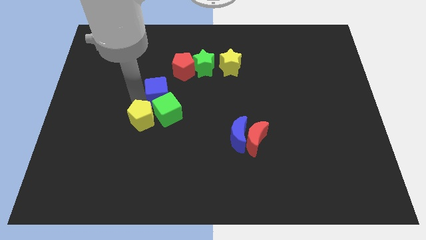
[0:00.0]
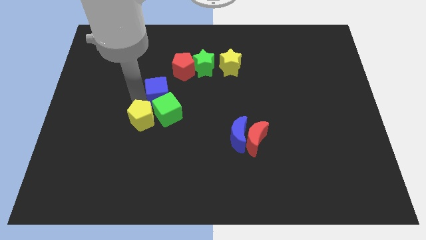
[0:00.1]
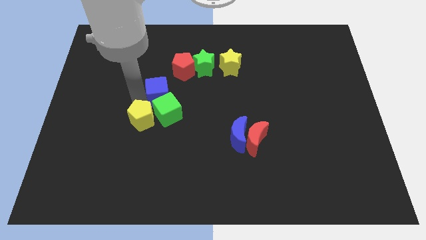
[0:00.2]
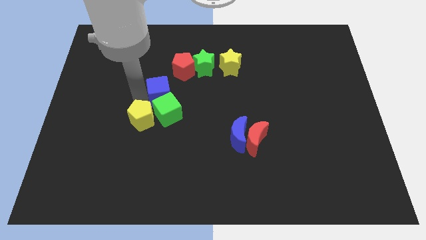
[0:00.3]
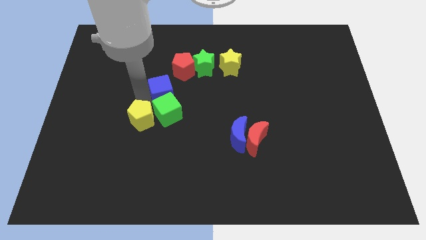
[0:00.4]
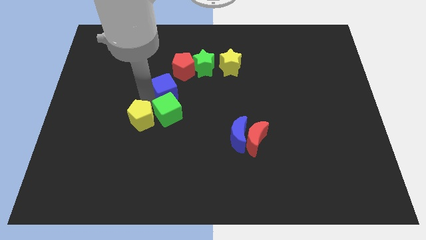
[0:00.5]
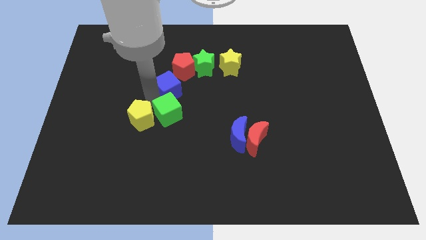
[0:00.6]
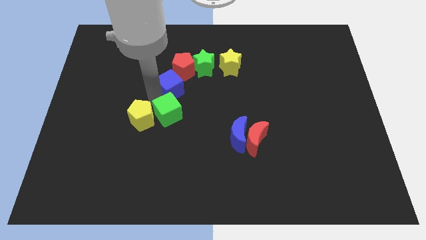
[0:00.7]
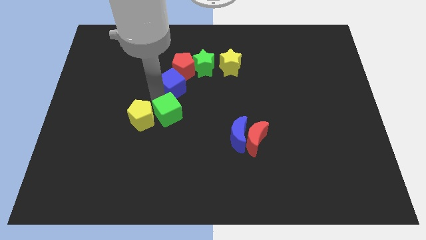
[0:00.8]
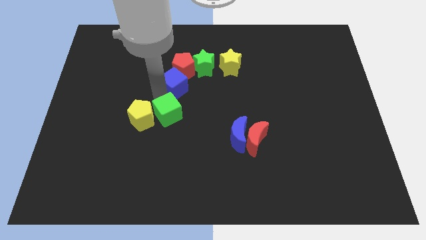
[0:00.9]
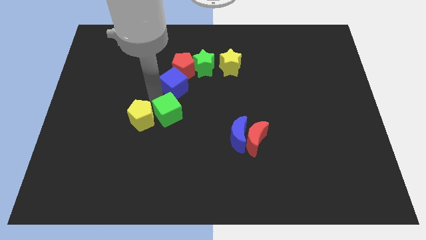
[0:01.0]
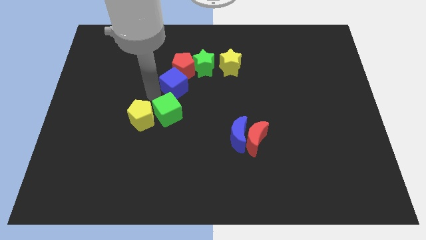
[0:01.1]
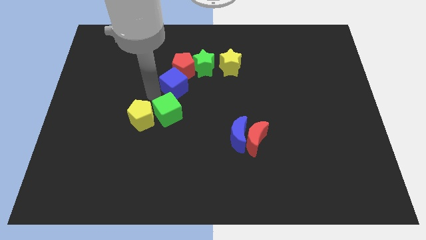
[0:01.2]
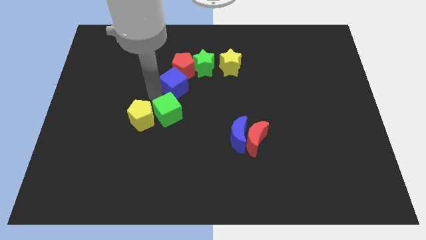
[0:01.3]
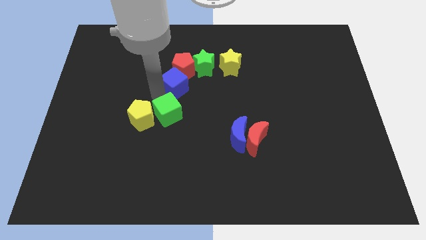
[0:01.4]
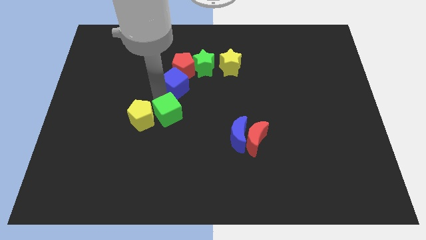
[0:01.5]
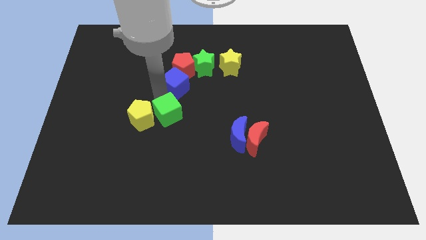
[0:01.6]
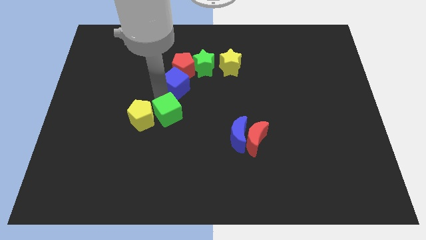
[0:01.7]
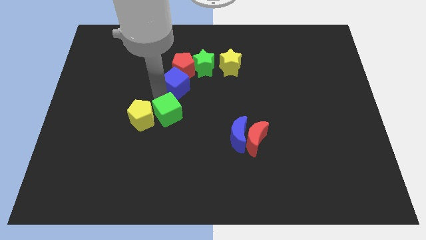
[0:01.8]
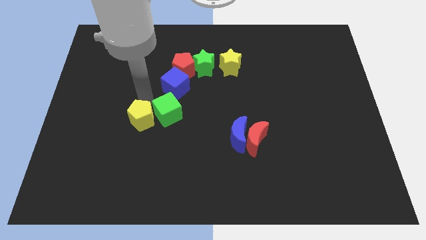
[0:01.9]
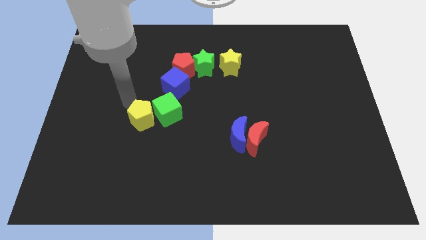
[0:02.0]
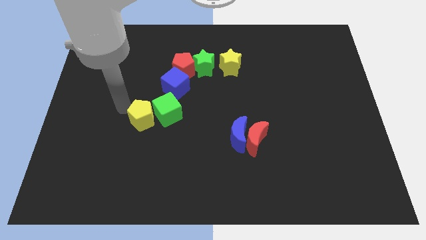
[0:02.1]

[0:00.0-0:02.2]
place blue cube between green block and red pentagon

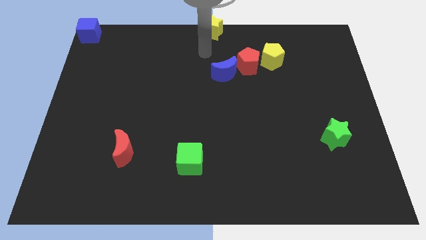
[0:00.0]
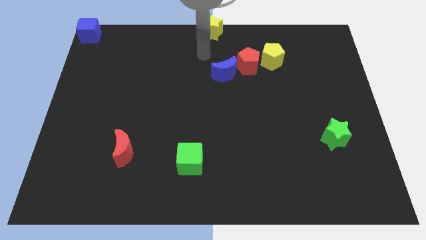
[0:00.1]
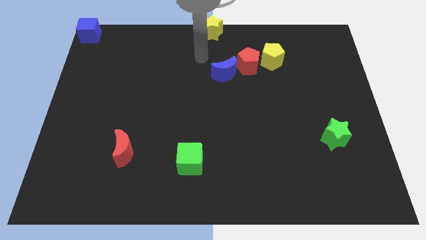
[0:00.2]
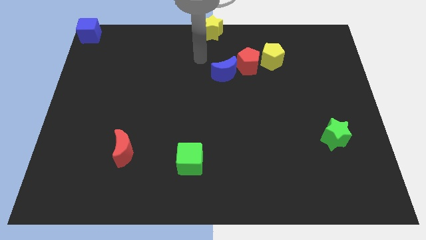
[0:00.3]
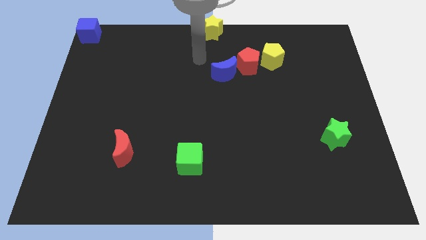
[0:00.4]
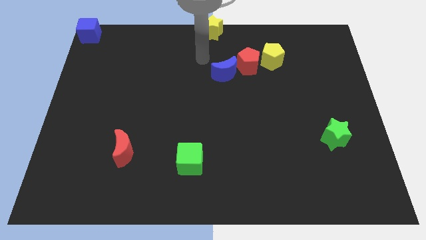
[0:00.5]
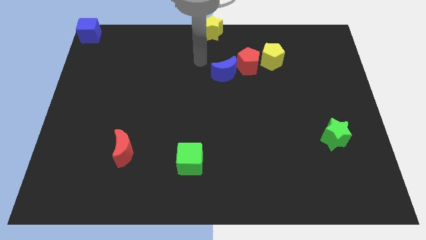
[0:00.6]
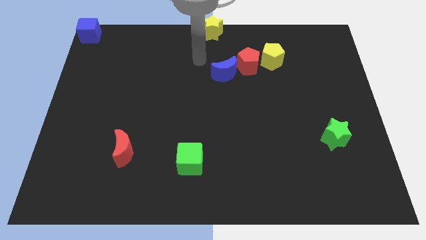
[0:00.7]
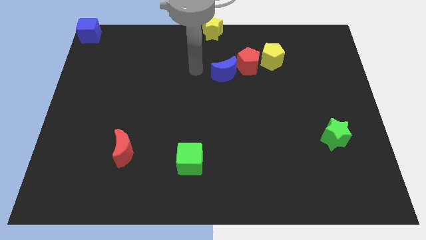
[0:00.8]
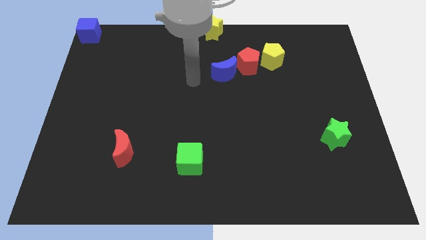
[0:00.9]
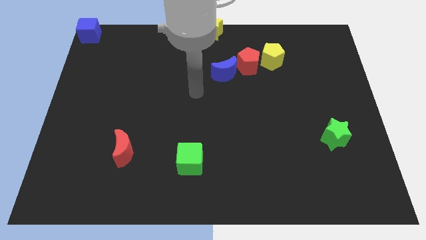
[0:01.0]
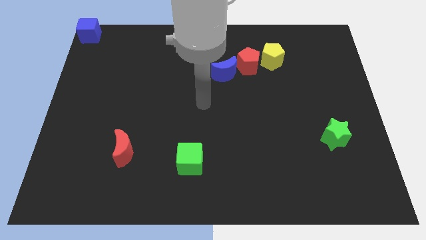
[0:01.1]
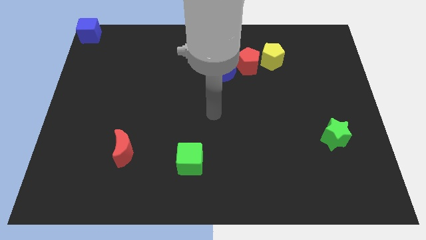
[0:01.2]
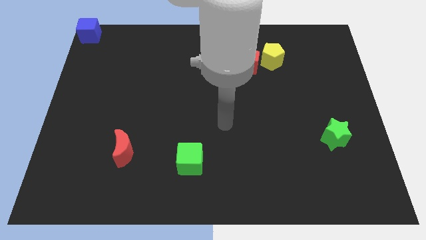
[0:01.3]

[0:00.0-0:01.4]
move the arm away from the yellow star

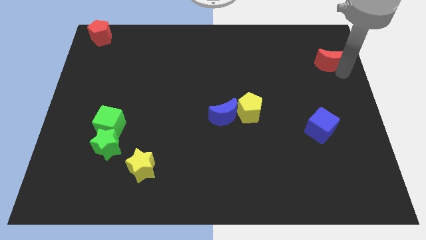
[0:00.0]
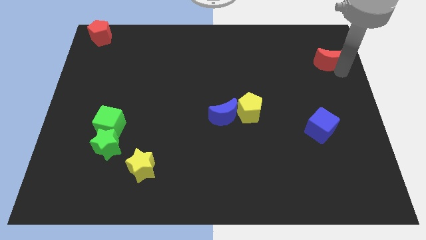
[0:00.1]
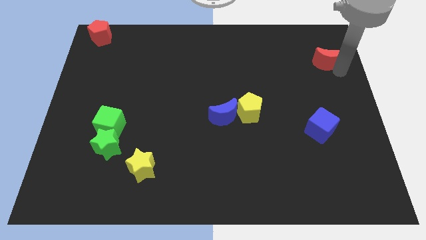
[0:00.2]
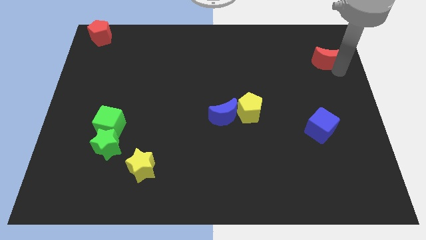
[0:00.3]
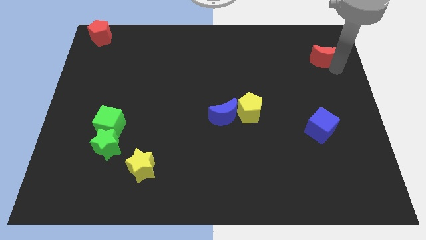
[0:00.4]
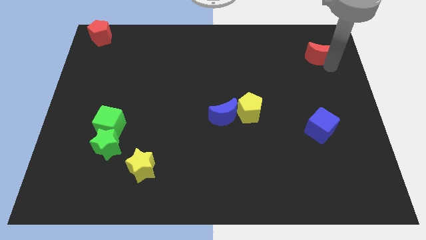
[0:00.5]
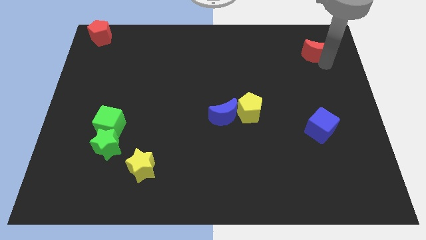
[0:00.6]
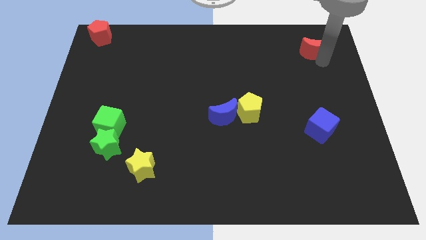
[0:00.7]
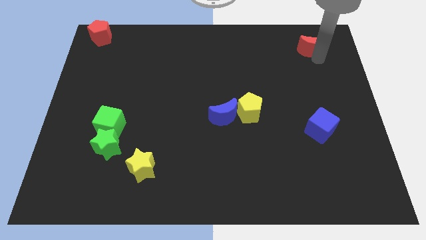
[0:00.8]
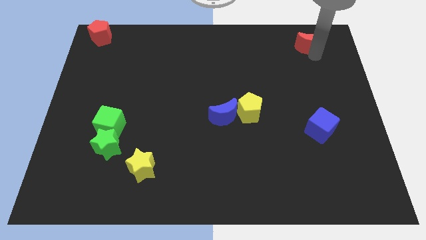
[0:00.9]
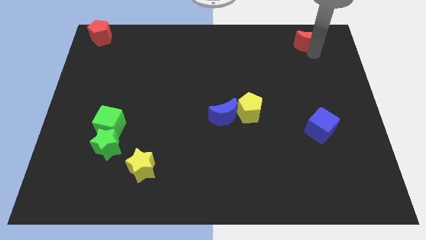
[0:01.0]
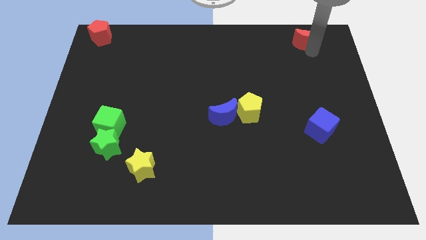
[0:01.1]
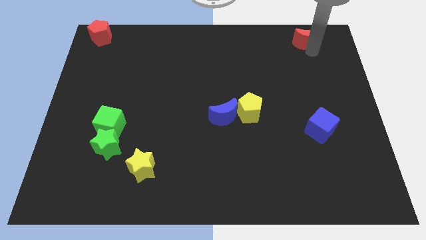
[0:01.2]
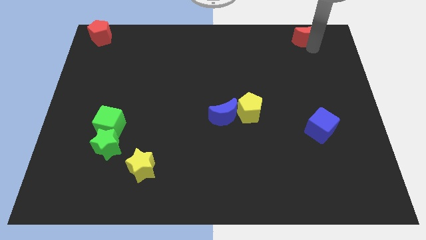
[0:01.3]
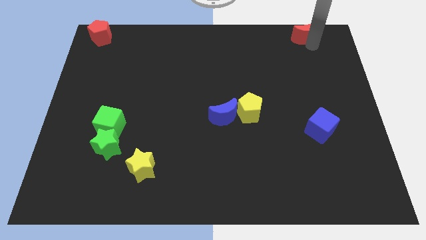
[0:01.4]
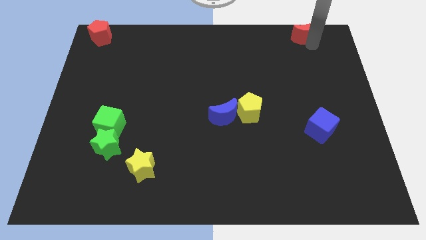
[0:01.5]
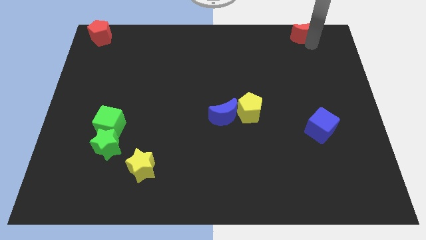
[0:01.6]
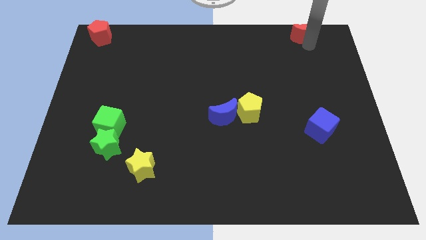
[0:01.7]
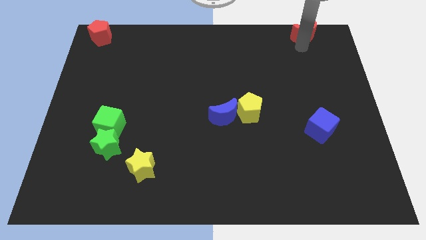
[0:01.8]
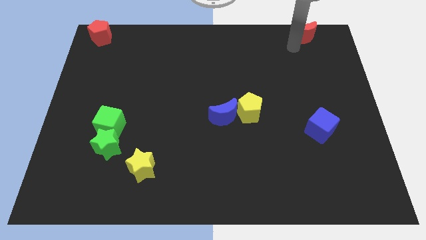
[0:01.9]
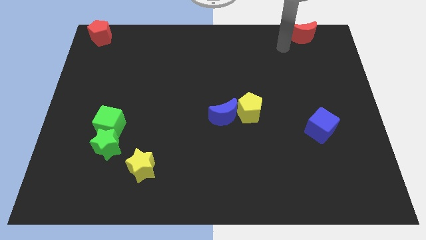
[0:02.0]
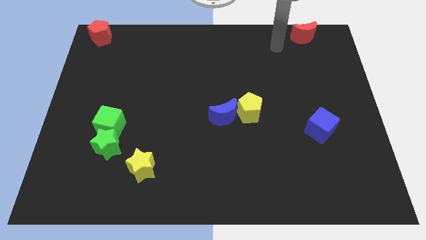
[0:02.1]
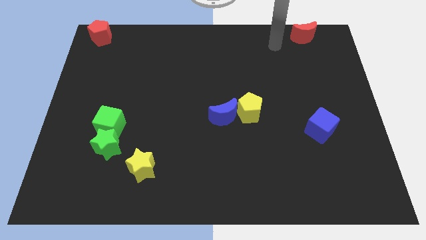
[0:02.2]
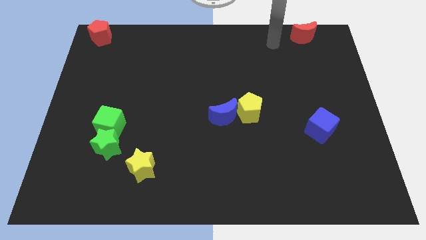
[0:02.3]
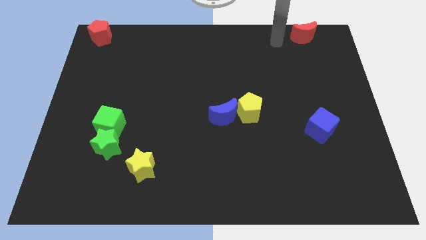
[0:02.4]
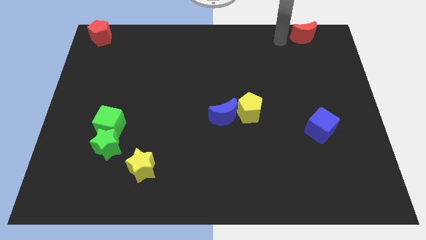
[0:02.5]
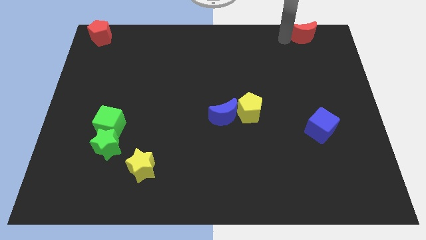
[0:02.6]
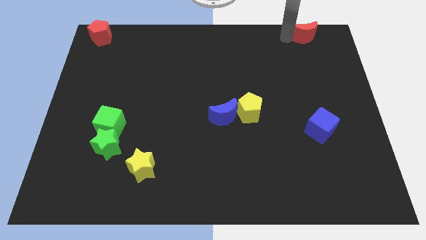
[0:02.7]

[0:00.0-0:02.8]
slide the red moon to the top side

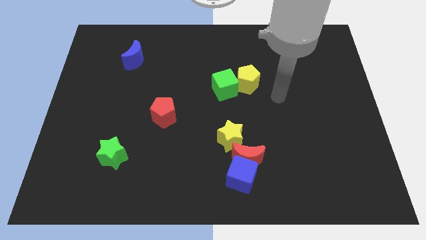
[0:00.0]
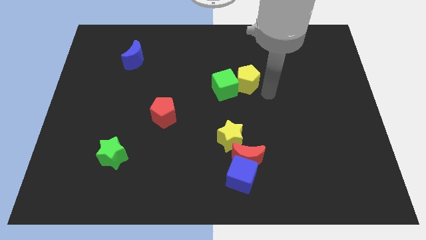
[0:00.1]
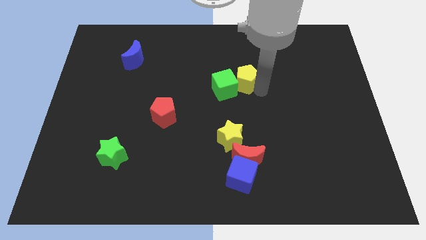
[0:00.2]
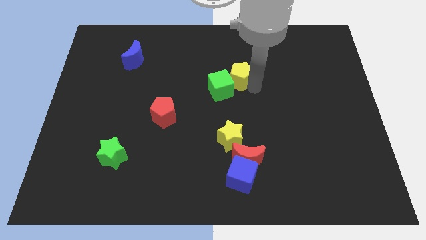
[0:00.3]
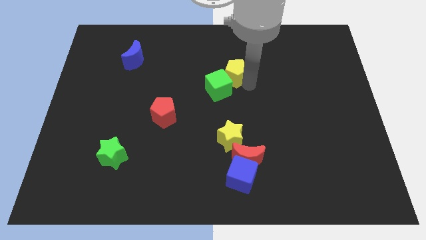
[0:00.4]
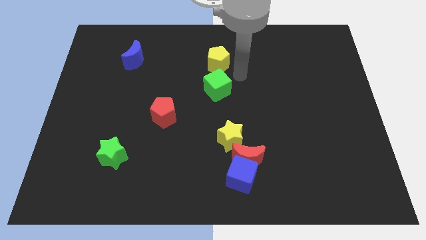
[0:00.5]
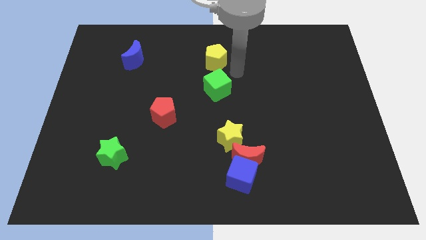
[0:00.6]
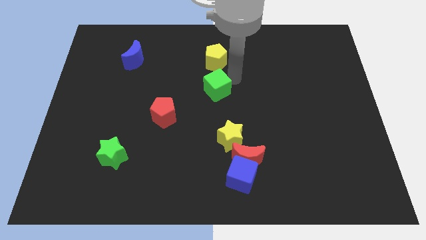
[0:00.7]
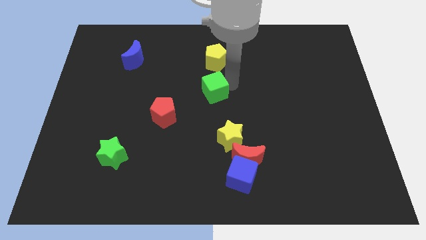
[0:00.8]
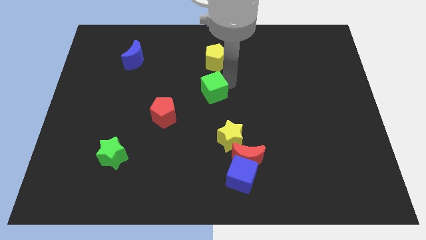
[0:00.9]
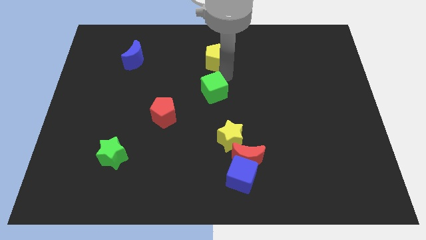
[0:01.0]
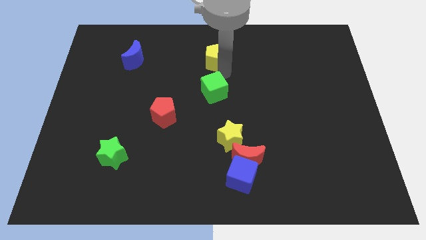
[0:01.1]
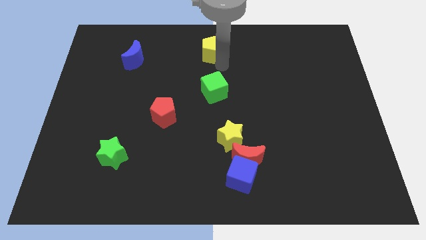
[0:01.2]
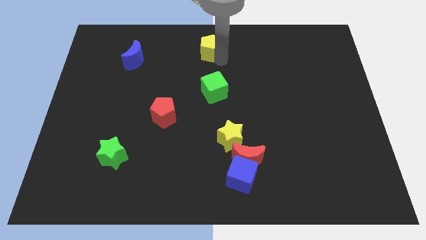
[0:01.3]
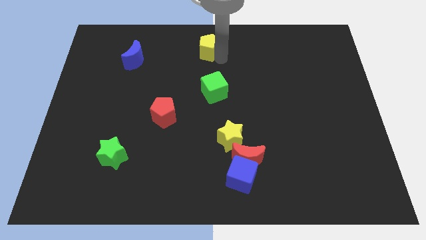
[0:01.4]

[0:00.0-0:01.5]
separate the yellow pentagon from the green cube

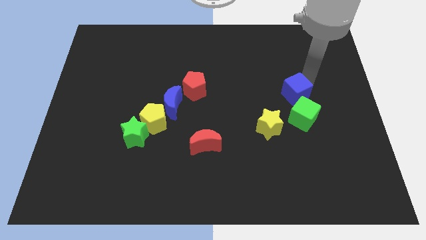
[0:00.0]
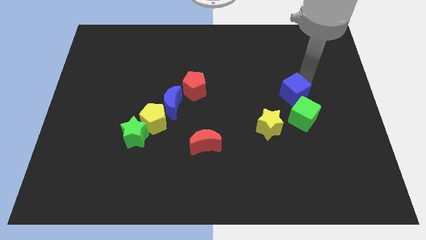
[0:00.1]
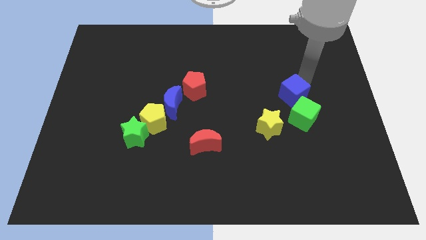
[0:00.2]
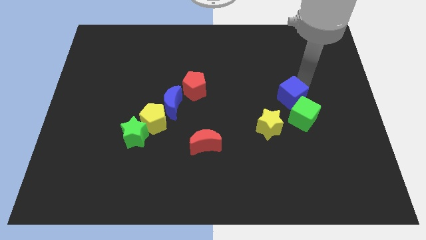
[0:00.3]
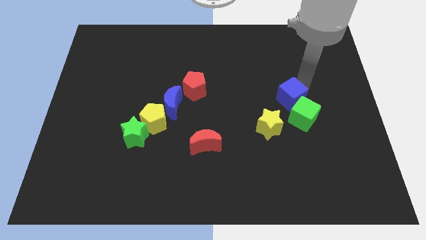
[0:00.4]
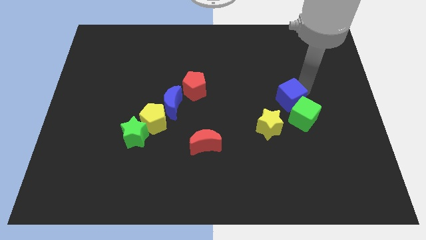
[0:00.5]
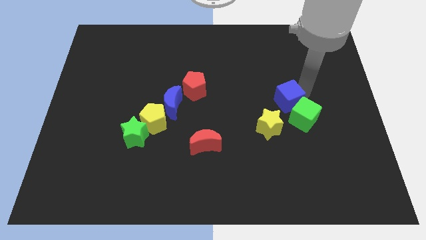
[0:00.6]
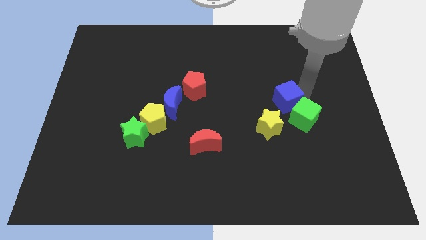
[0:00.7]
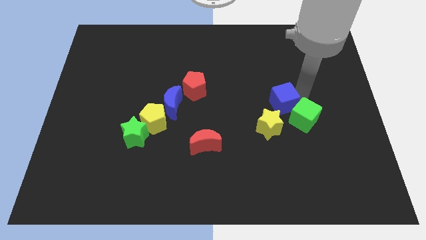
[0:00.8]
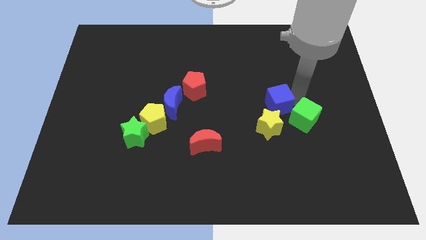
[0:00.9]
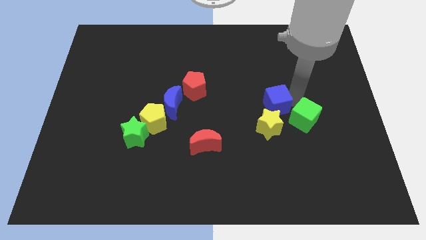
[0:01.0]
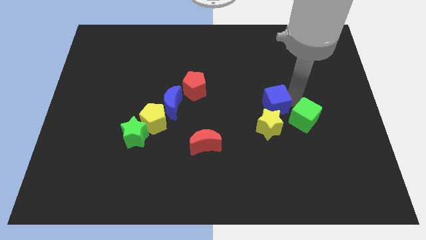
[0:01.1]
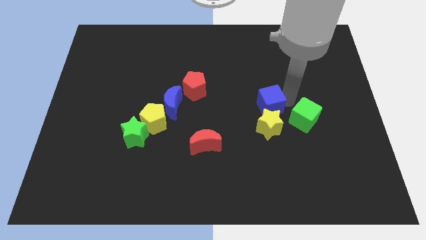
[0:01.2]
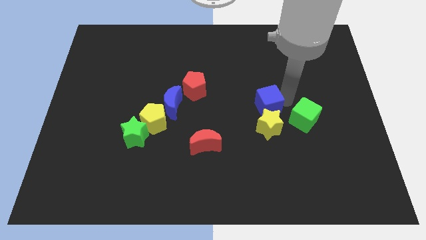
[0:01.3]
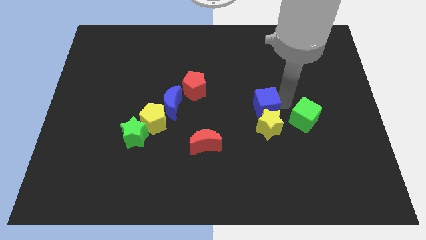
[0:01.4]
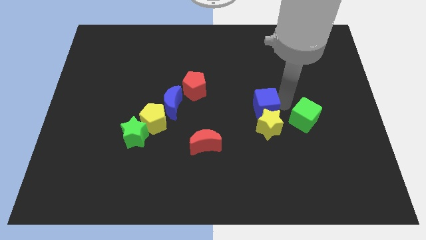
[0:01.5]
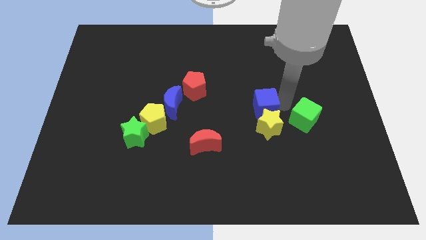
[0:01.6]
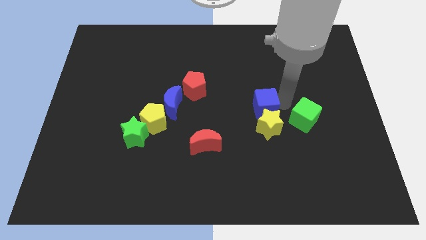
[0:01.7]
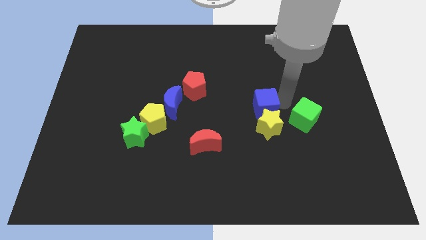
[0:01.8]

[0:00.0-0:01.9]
place the blue cube above the yellow star
